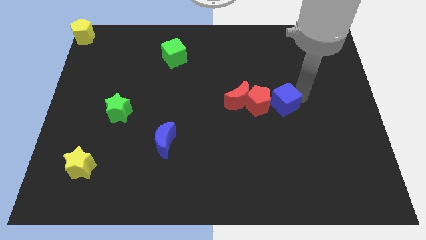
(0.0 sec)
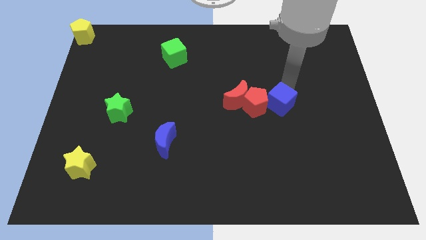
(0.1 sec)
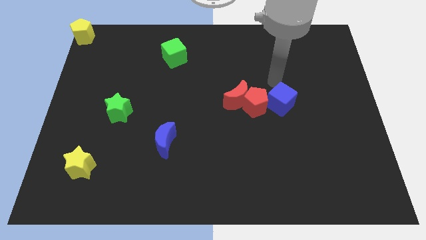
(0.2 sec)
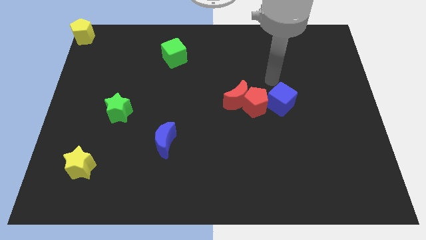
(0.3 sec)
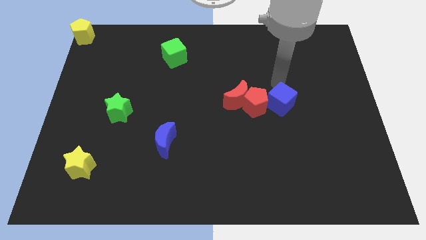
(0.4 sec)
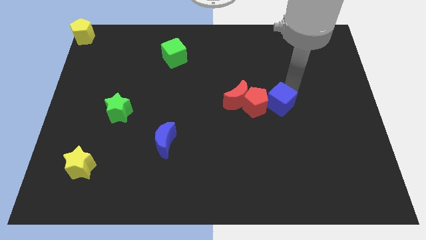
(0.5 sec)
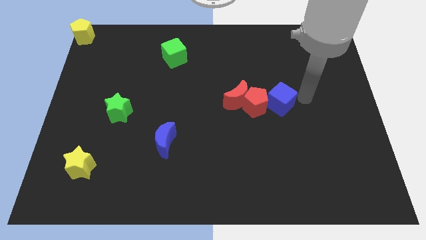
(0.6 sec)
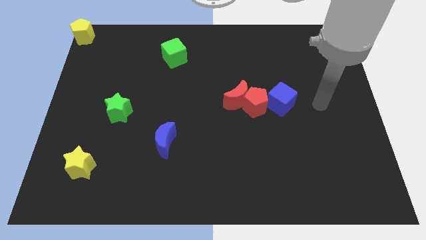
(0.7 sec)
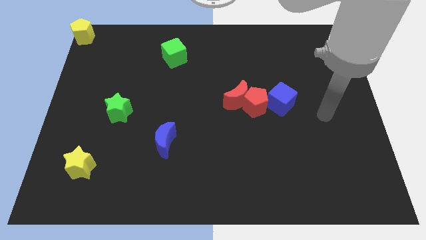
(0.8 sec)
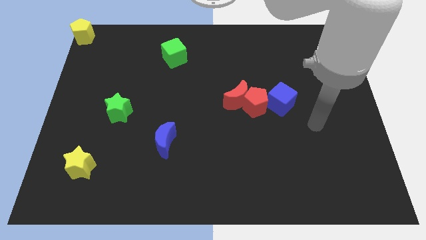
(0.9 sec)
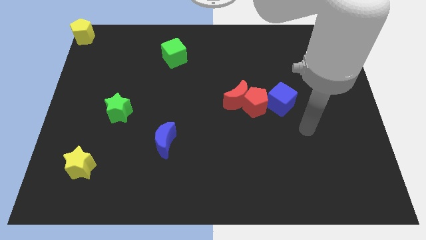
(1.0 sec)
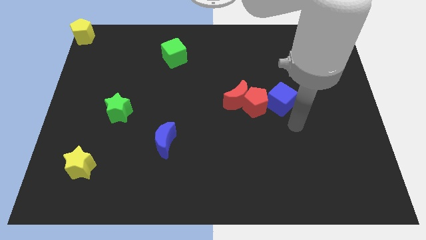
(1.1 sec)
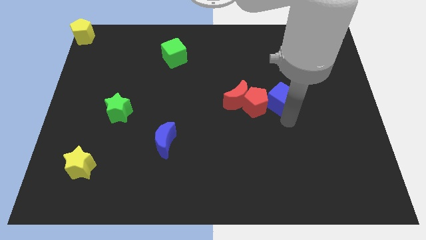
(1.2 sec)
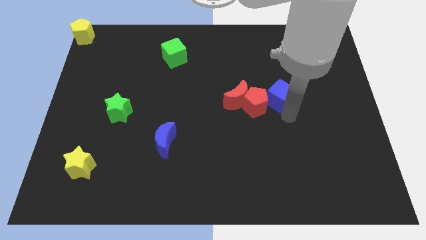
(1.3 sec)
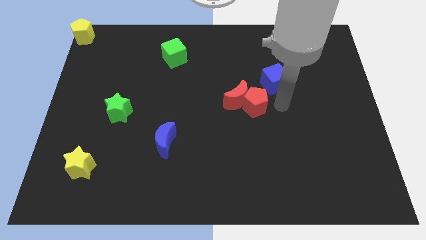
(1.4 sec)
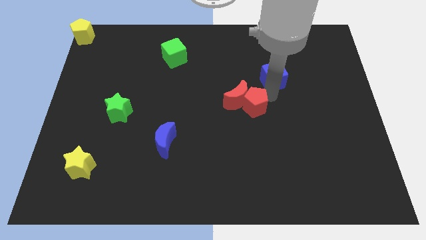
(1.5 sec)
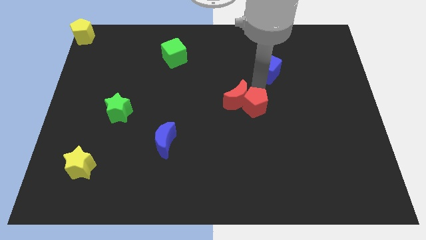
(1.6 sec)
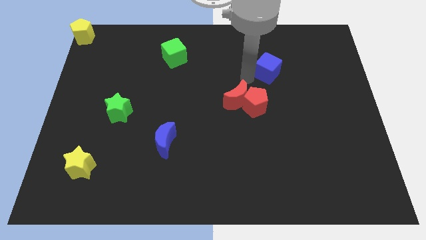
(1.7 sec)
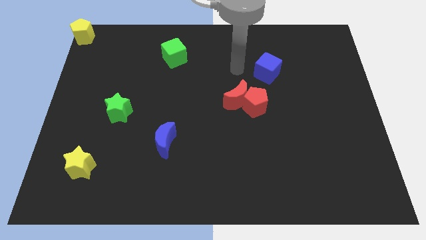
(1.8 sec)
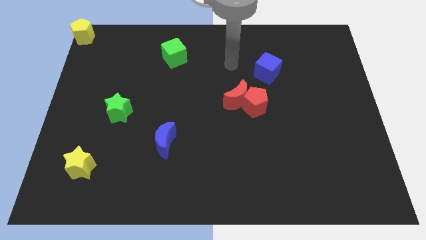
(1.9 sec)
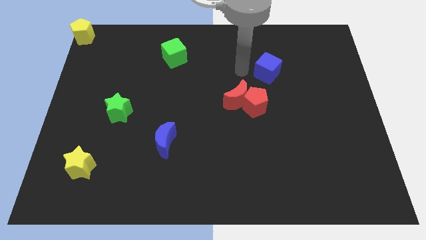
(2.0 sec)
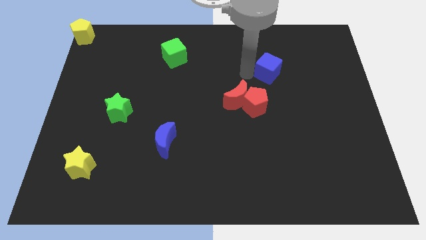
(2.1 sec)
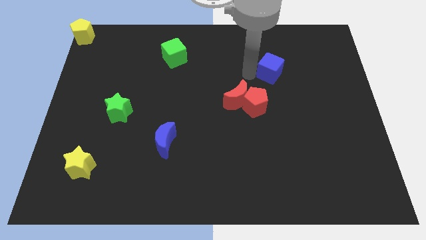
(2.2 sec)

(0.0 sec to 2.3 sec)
place the blue cube above the red pentagon

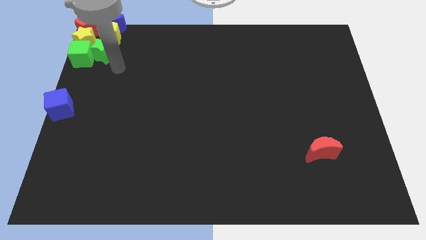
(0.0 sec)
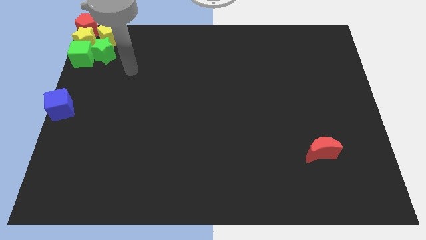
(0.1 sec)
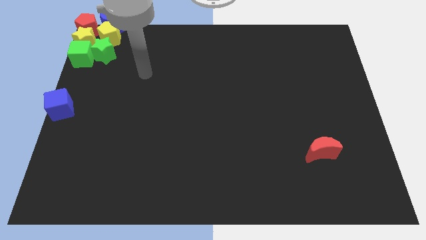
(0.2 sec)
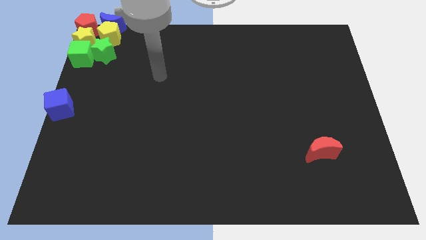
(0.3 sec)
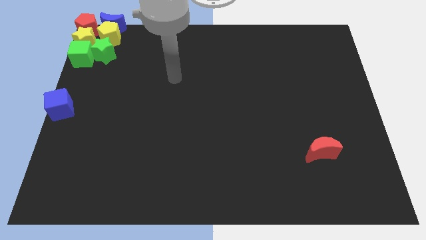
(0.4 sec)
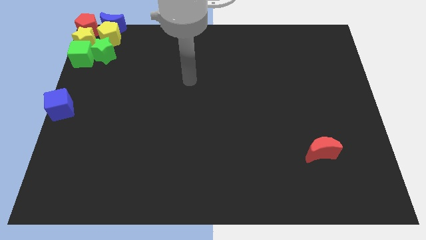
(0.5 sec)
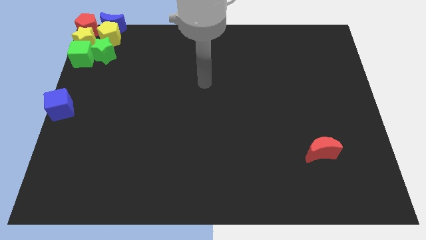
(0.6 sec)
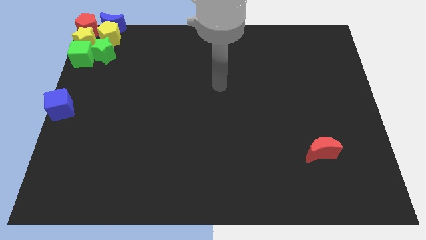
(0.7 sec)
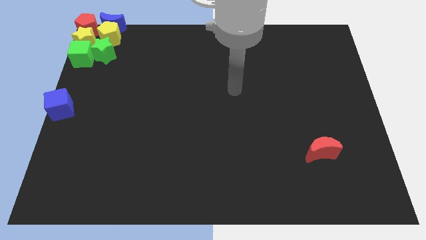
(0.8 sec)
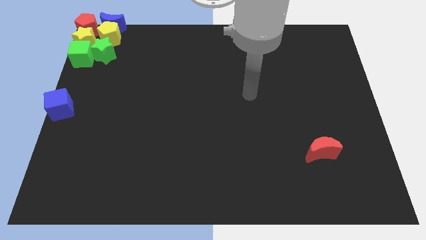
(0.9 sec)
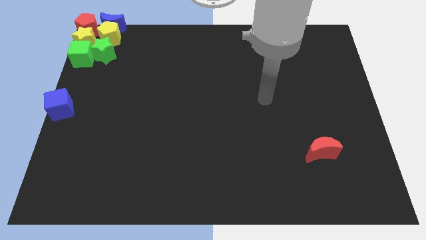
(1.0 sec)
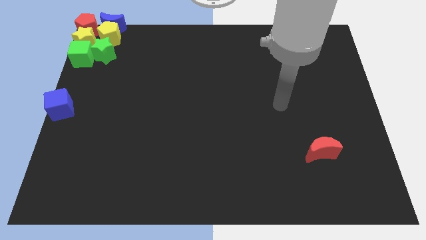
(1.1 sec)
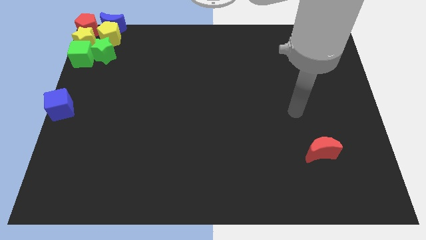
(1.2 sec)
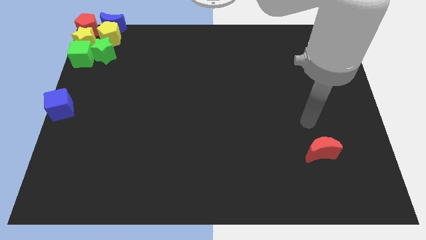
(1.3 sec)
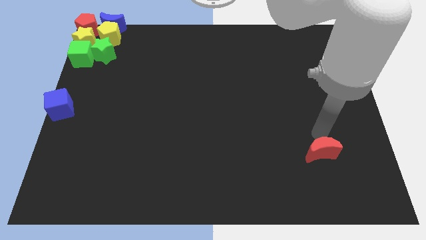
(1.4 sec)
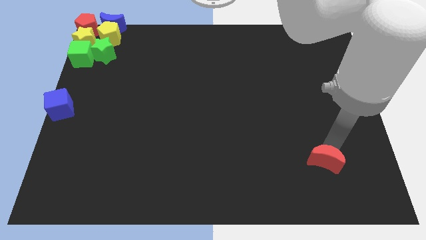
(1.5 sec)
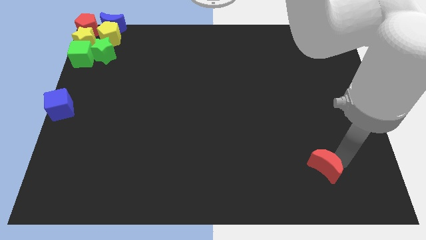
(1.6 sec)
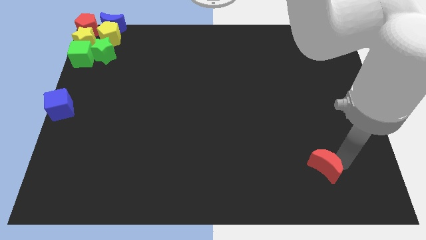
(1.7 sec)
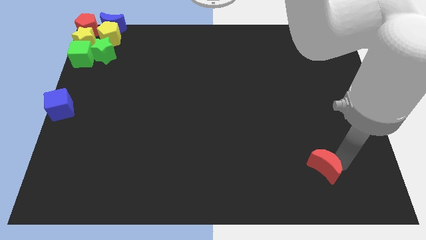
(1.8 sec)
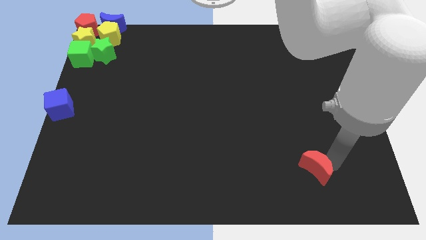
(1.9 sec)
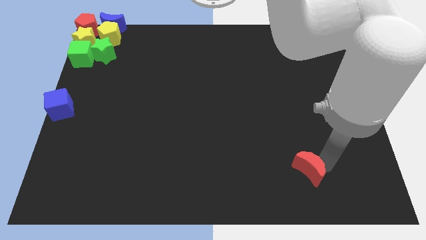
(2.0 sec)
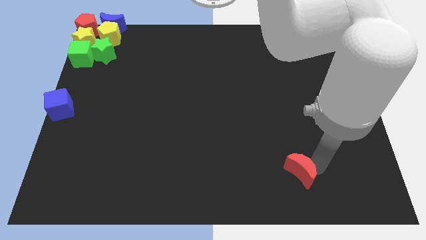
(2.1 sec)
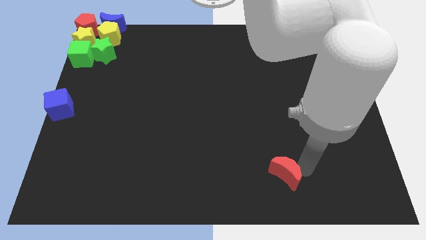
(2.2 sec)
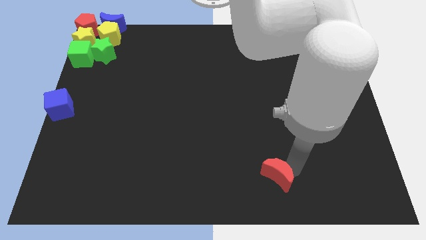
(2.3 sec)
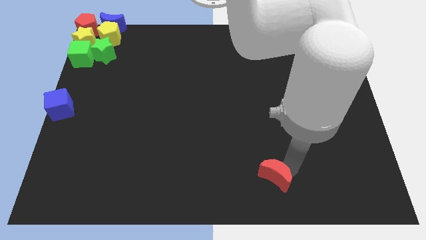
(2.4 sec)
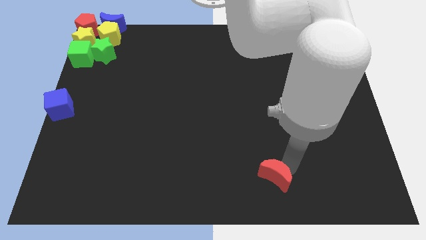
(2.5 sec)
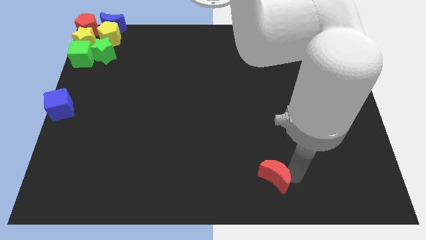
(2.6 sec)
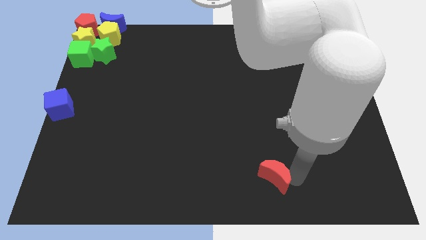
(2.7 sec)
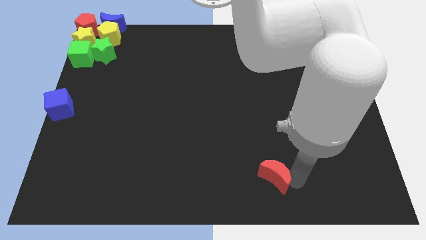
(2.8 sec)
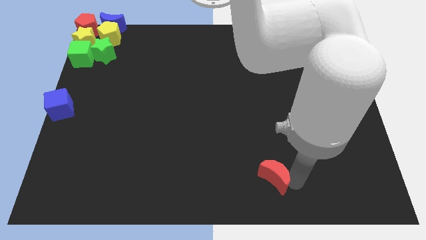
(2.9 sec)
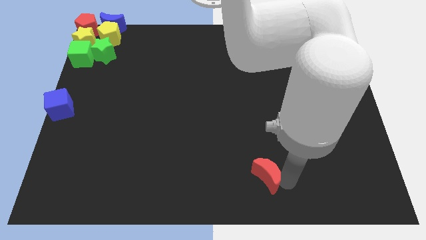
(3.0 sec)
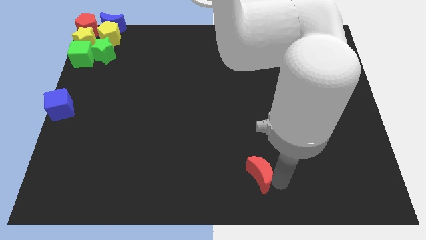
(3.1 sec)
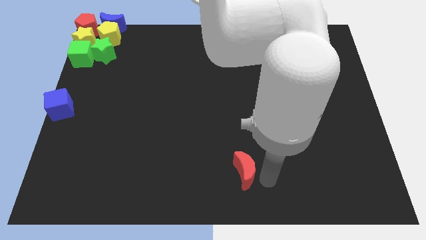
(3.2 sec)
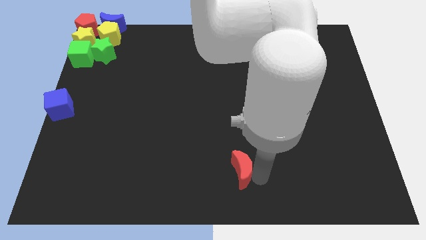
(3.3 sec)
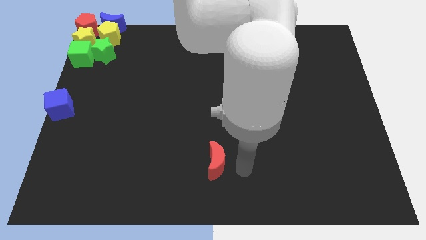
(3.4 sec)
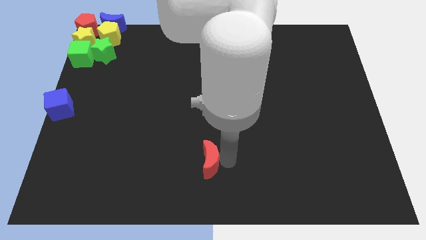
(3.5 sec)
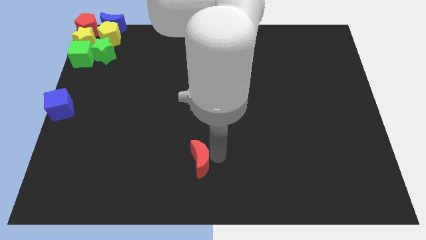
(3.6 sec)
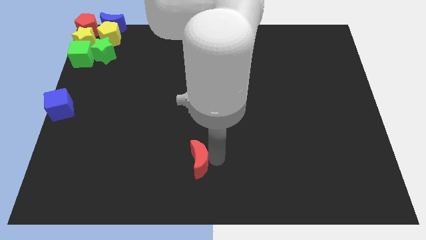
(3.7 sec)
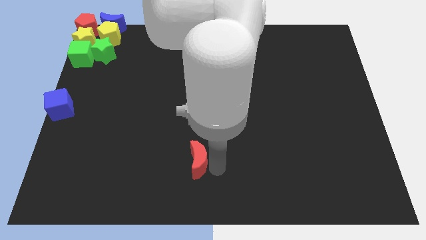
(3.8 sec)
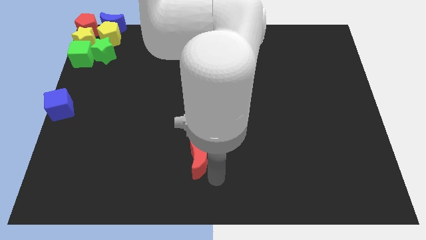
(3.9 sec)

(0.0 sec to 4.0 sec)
push the red crescent towards the bottom center side of the board

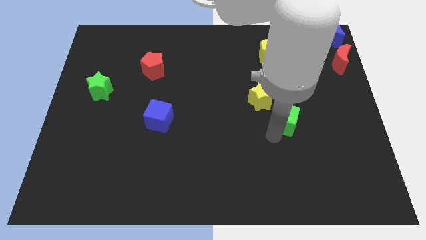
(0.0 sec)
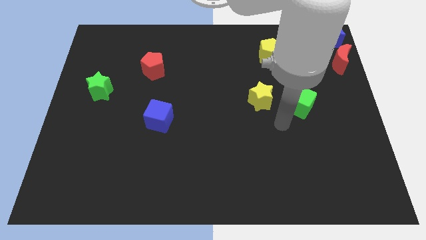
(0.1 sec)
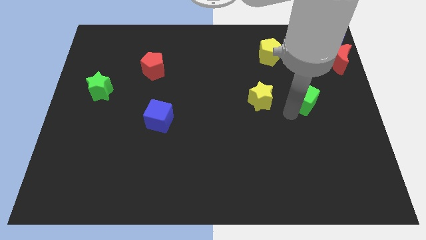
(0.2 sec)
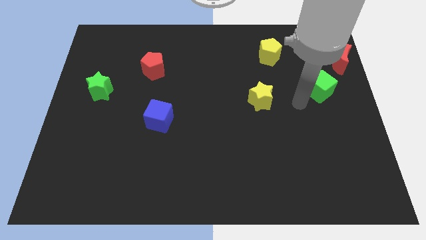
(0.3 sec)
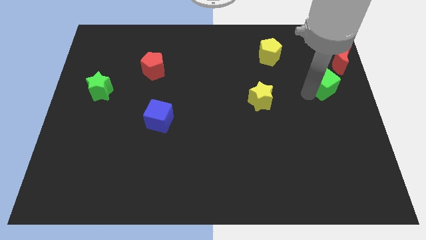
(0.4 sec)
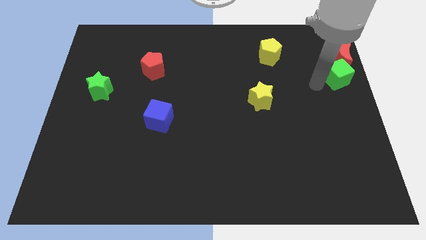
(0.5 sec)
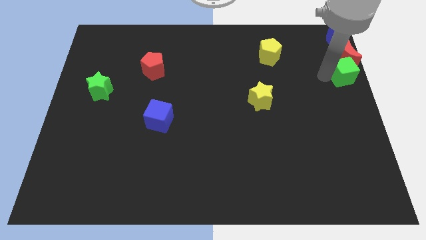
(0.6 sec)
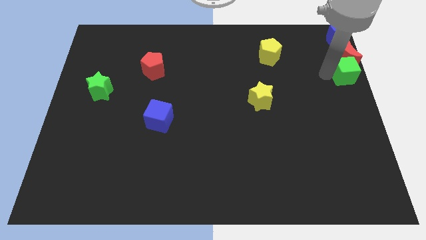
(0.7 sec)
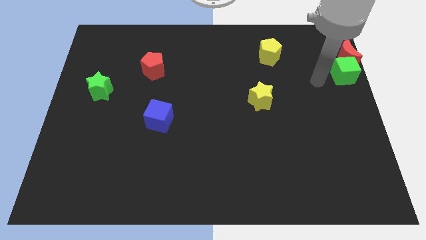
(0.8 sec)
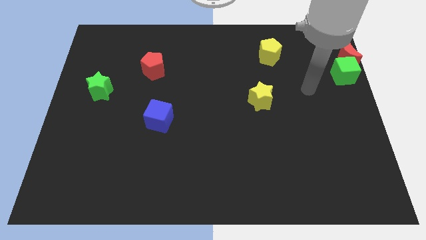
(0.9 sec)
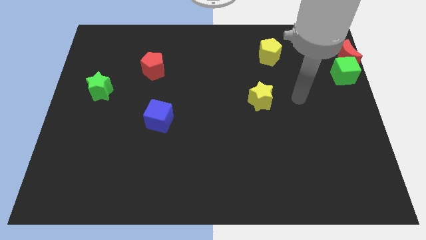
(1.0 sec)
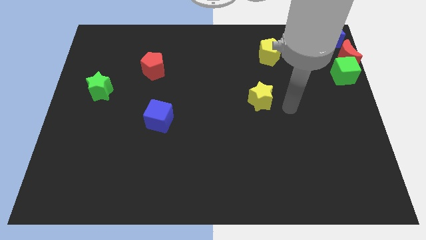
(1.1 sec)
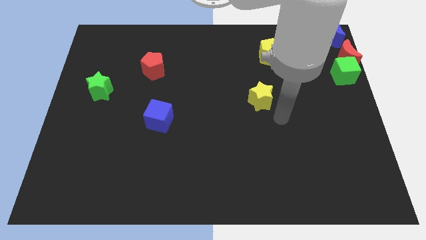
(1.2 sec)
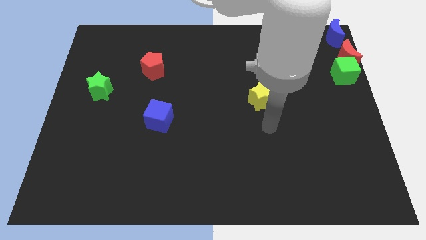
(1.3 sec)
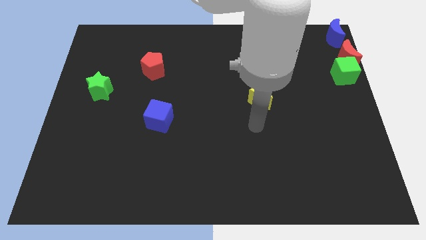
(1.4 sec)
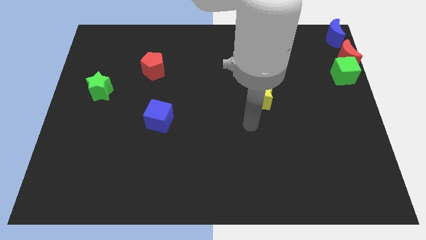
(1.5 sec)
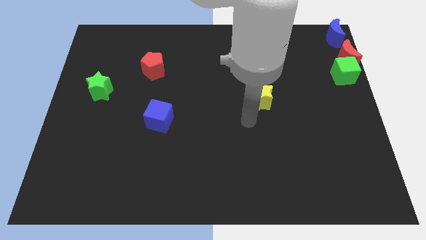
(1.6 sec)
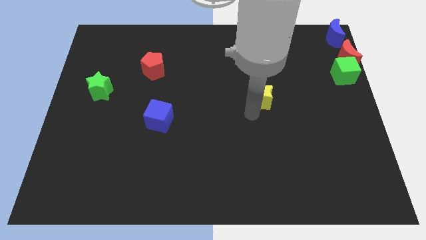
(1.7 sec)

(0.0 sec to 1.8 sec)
place the arm near the yellow star

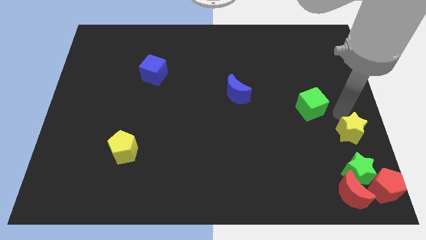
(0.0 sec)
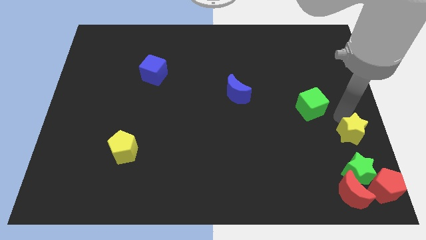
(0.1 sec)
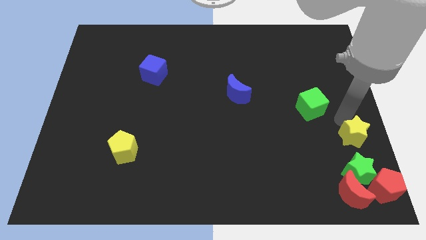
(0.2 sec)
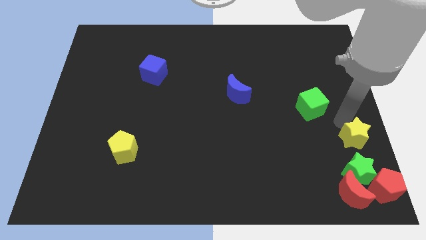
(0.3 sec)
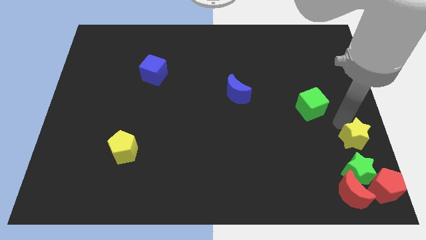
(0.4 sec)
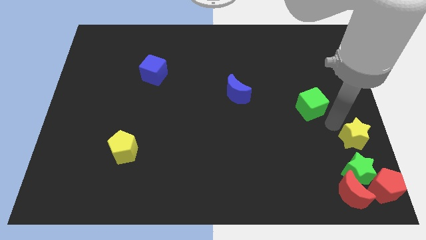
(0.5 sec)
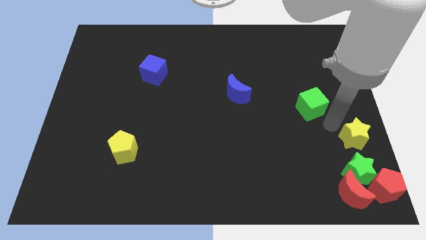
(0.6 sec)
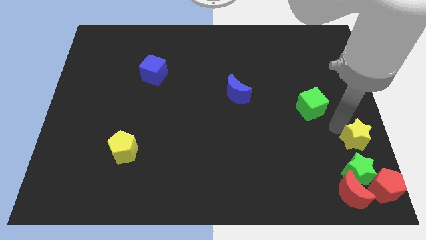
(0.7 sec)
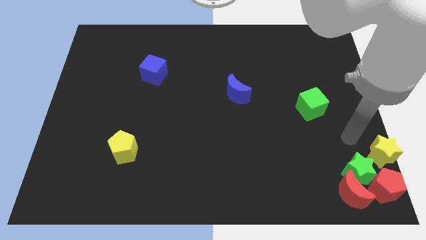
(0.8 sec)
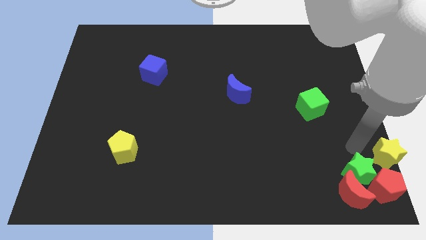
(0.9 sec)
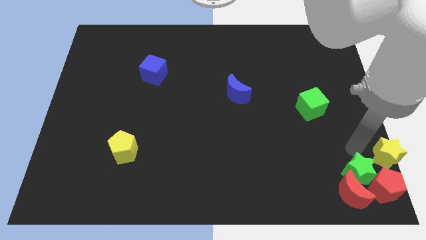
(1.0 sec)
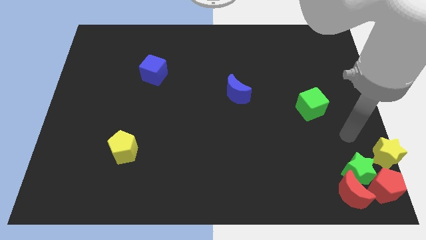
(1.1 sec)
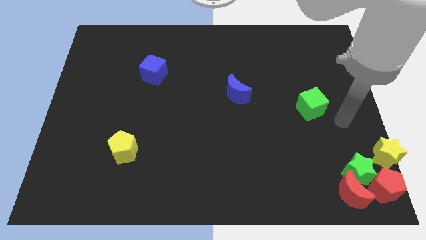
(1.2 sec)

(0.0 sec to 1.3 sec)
place the yellow star above the red pentagon
